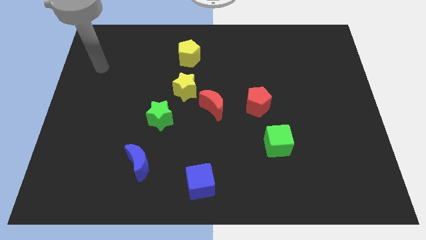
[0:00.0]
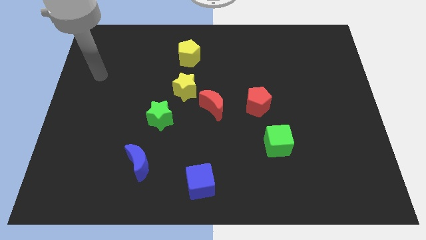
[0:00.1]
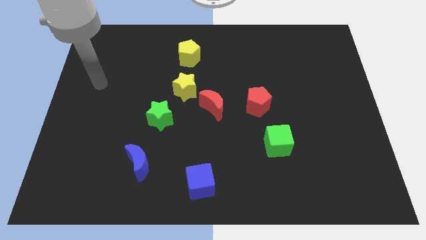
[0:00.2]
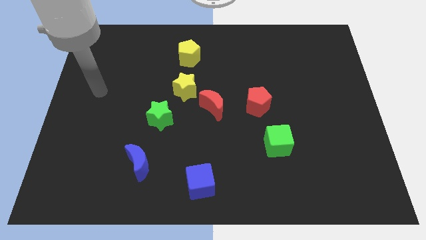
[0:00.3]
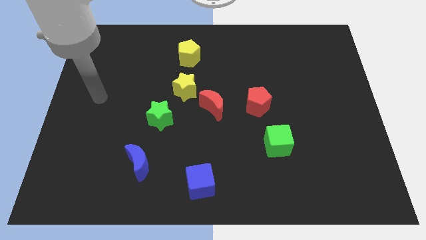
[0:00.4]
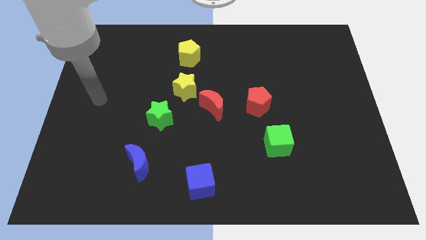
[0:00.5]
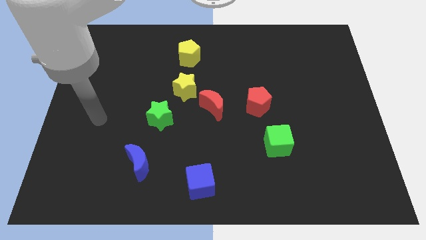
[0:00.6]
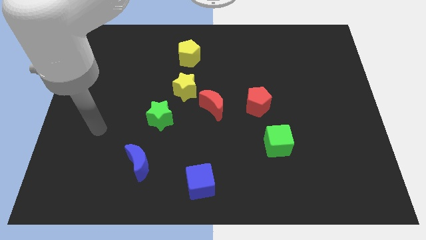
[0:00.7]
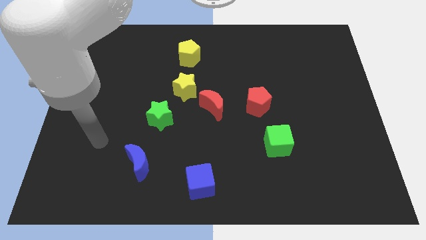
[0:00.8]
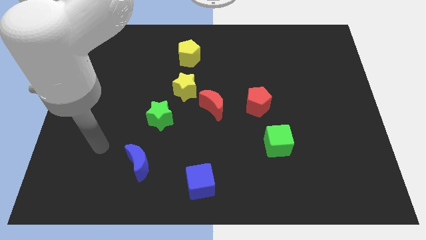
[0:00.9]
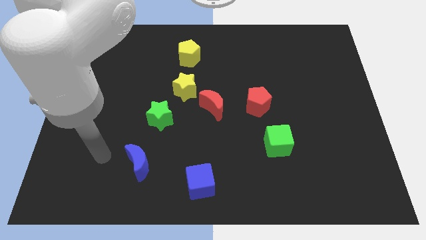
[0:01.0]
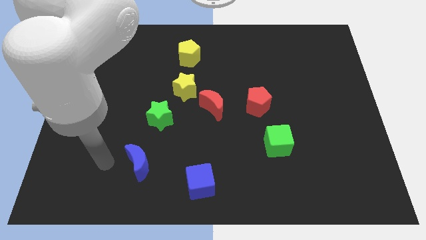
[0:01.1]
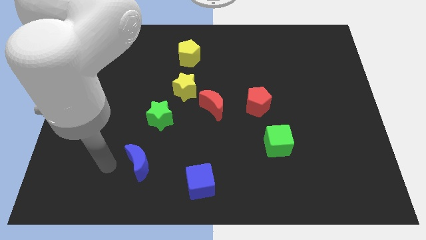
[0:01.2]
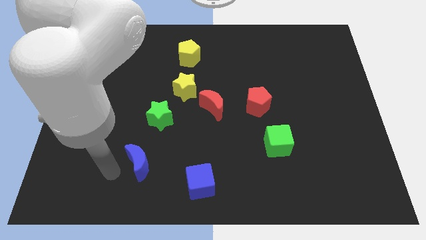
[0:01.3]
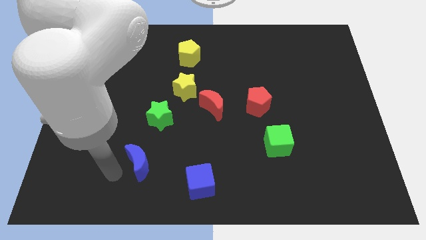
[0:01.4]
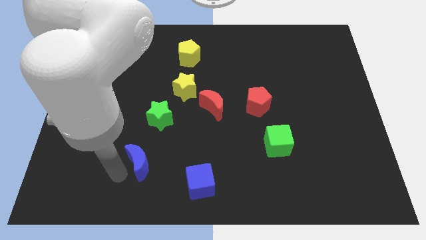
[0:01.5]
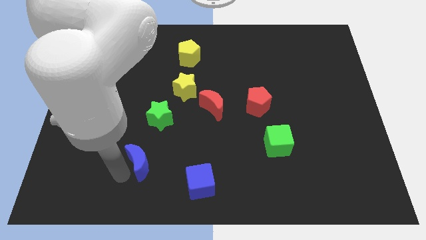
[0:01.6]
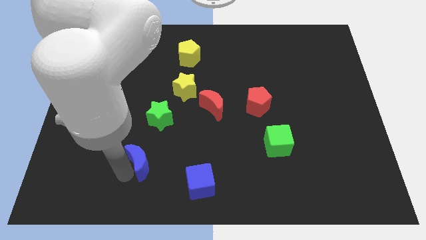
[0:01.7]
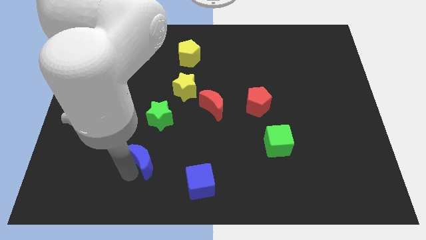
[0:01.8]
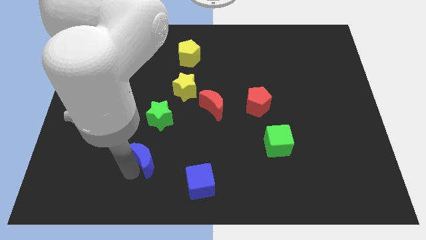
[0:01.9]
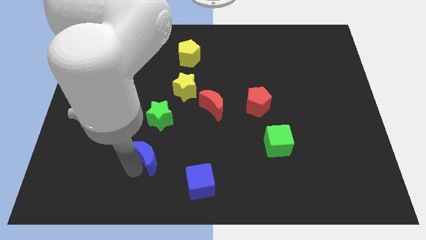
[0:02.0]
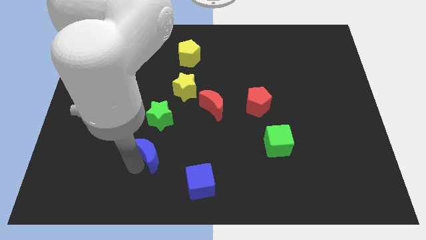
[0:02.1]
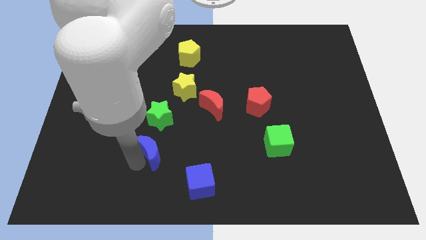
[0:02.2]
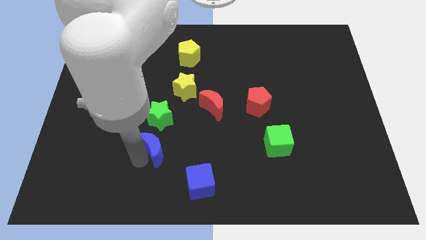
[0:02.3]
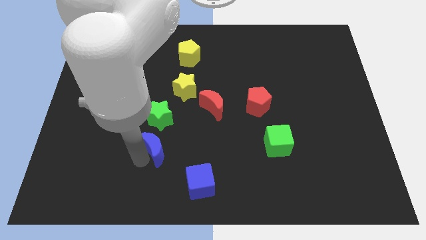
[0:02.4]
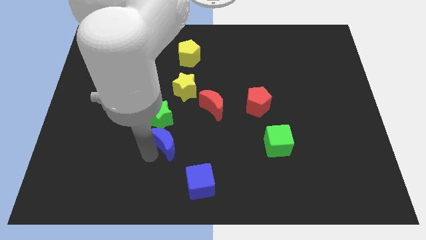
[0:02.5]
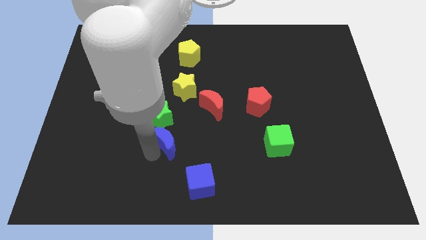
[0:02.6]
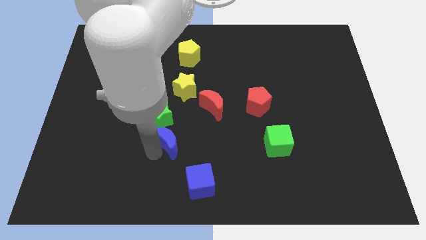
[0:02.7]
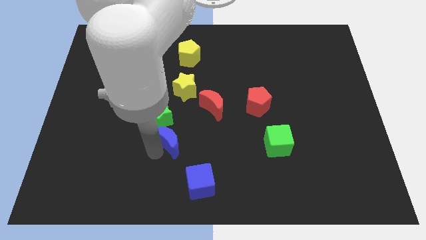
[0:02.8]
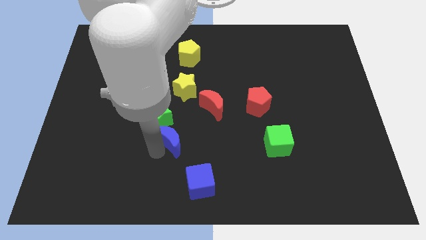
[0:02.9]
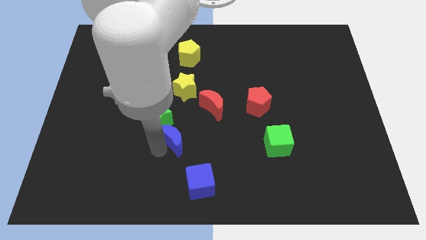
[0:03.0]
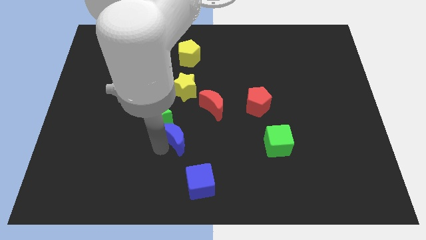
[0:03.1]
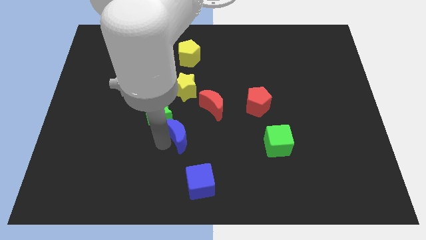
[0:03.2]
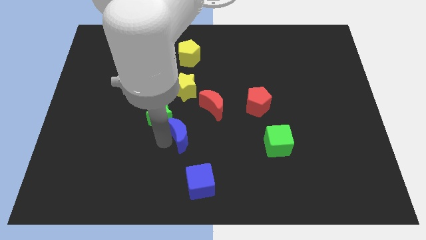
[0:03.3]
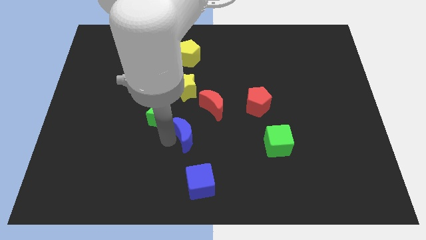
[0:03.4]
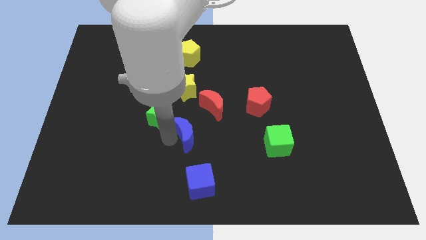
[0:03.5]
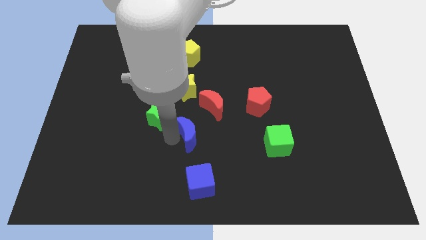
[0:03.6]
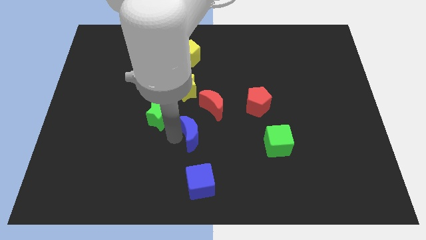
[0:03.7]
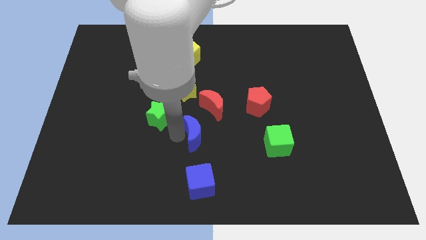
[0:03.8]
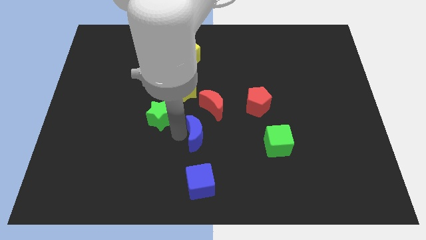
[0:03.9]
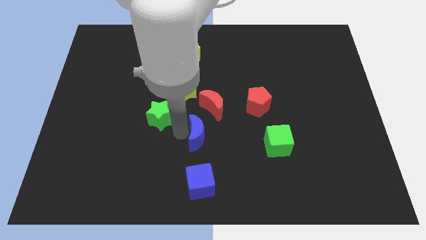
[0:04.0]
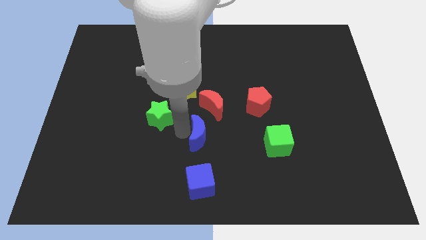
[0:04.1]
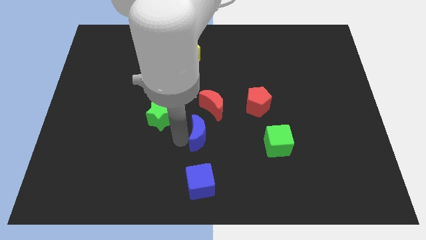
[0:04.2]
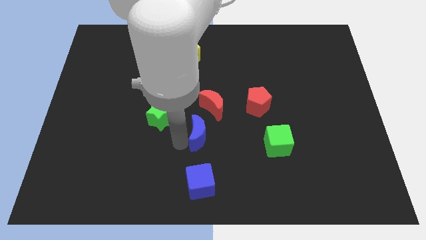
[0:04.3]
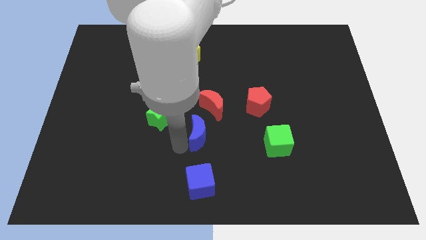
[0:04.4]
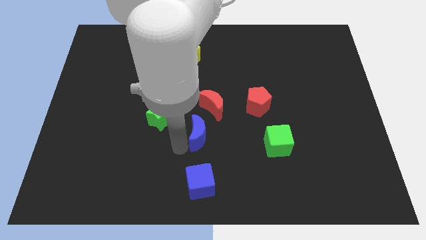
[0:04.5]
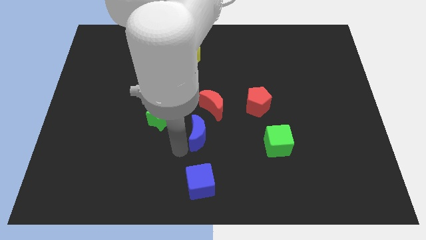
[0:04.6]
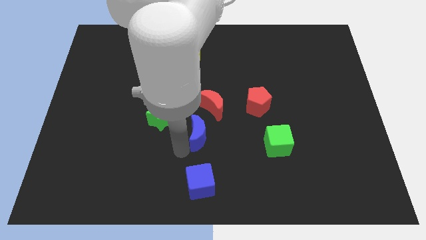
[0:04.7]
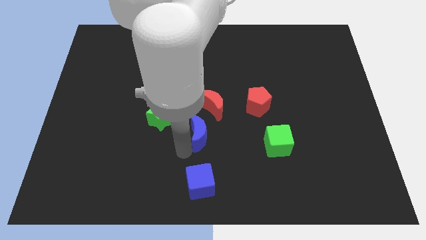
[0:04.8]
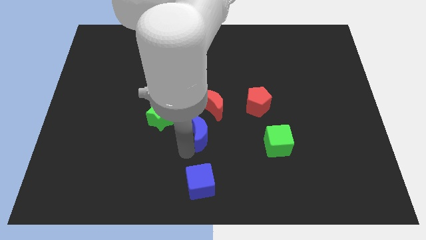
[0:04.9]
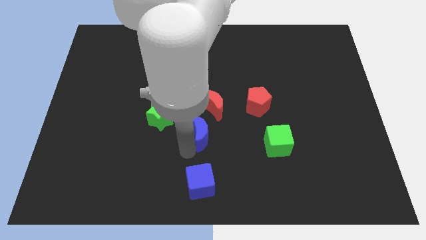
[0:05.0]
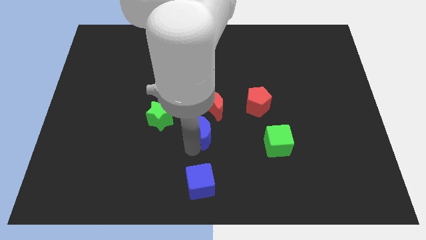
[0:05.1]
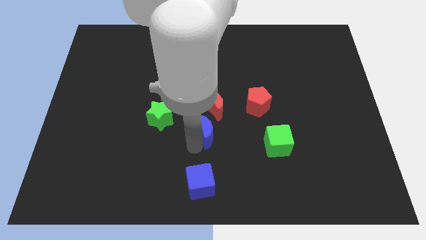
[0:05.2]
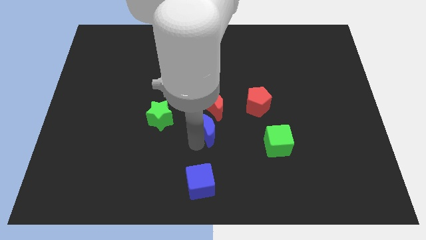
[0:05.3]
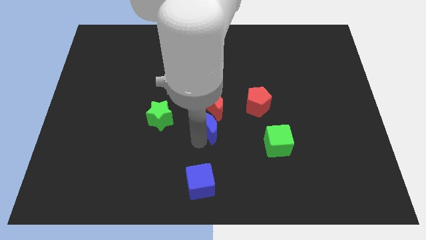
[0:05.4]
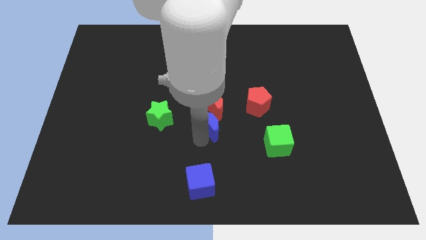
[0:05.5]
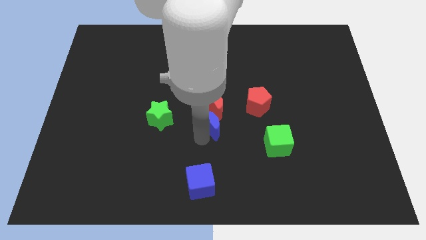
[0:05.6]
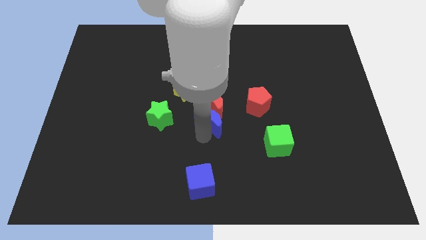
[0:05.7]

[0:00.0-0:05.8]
slide the blue moon to the red moon

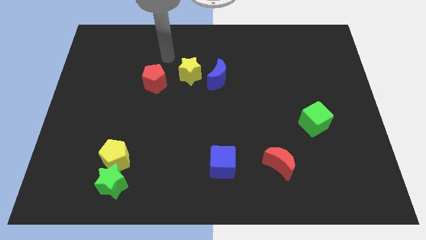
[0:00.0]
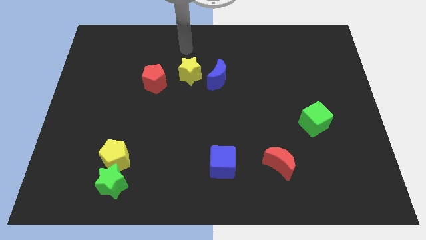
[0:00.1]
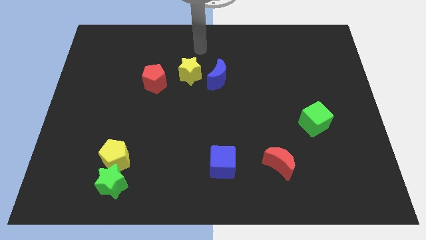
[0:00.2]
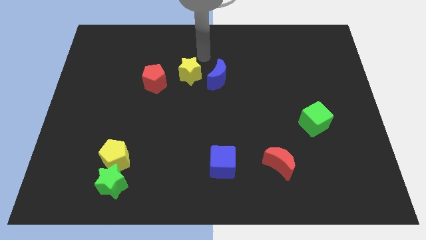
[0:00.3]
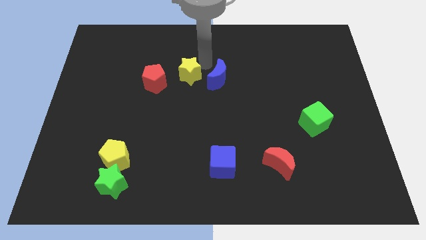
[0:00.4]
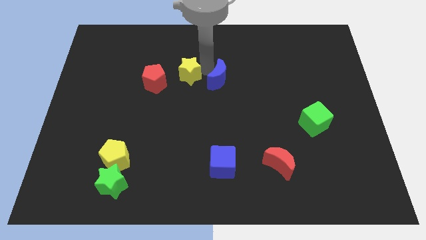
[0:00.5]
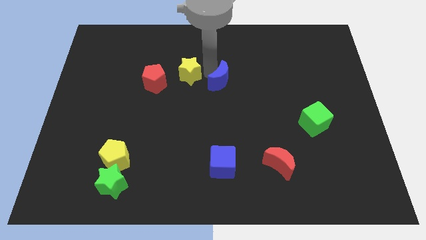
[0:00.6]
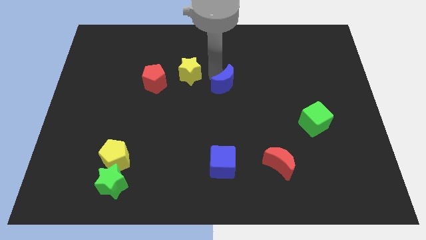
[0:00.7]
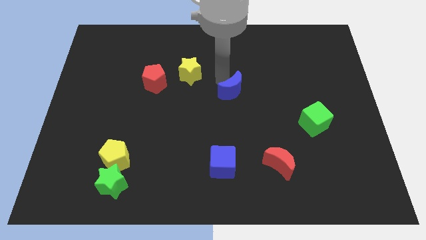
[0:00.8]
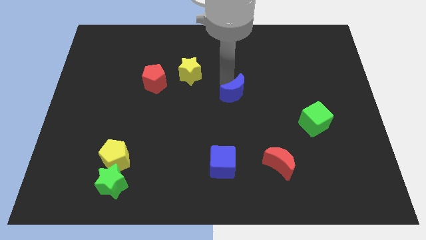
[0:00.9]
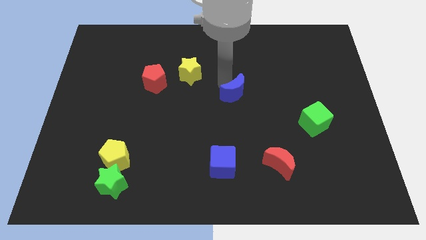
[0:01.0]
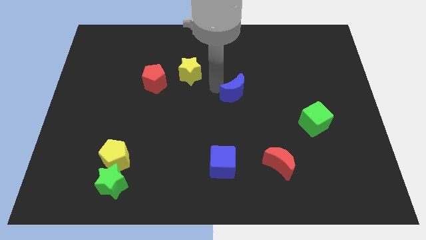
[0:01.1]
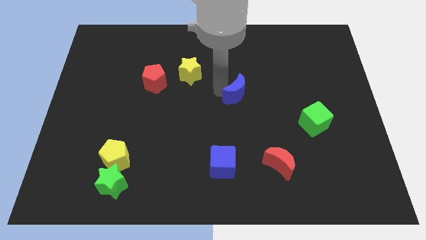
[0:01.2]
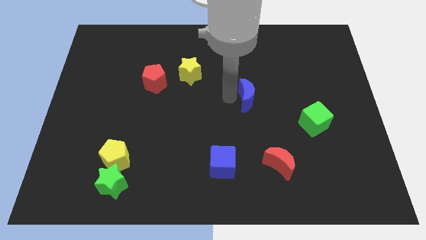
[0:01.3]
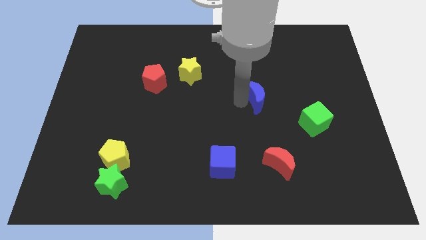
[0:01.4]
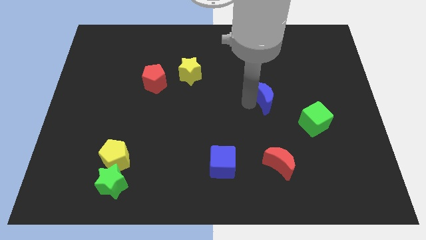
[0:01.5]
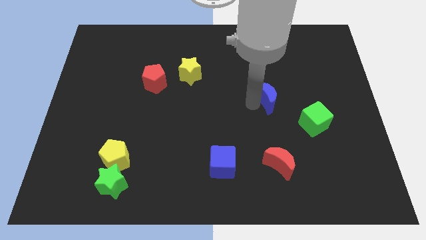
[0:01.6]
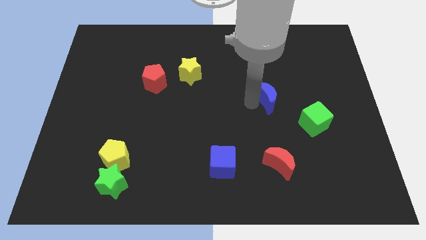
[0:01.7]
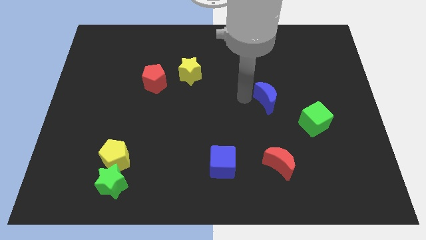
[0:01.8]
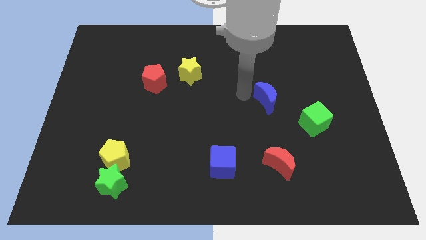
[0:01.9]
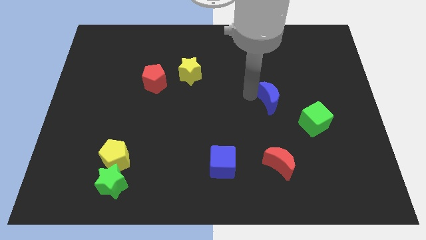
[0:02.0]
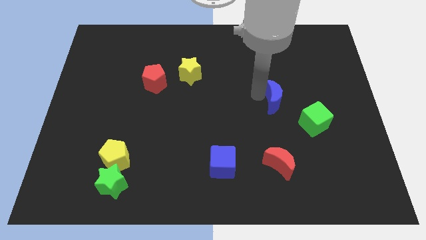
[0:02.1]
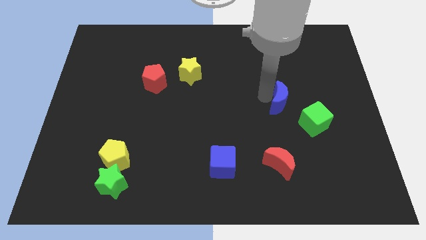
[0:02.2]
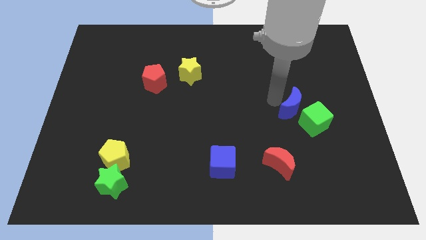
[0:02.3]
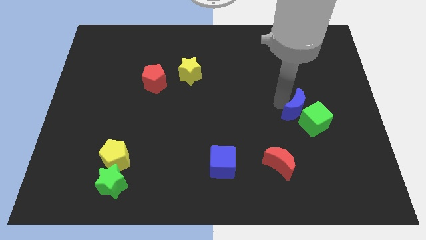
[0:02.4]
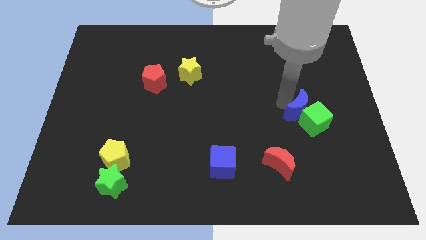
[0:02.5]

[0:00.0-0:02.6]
put the blue moon to the green cube

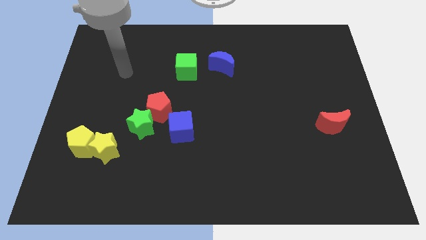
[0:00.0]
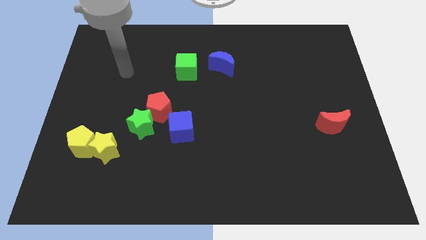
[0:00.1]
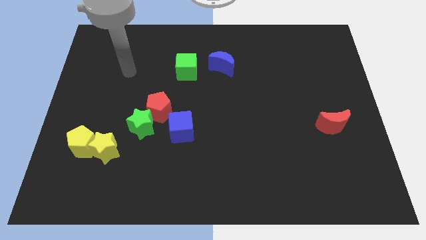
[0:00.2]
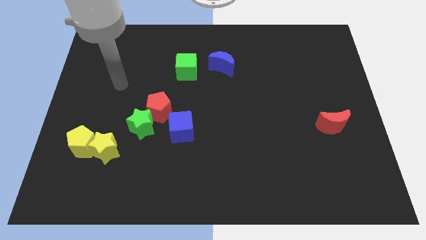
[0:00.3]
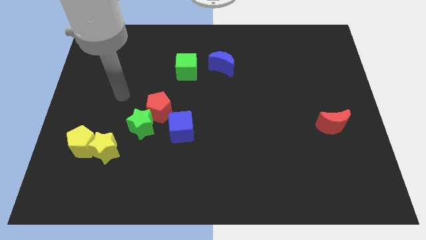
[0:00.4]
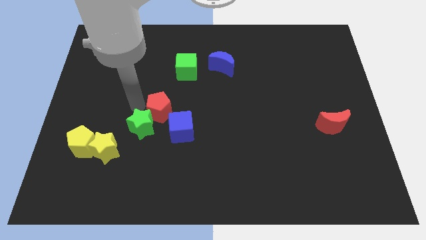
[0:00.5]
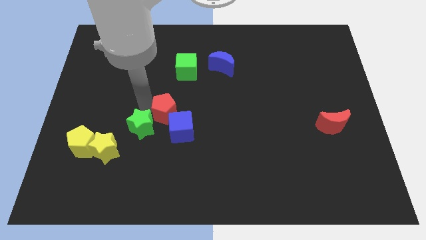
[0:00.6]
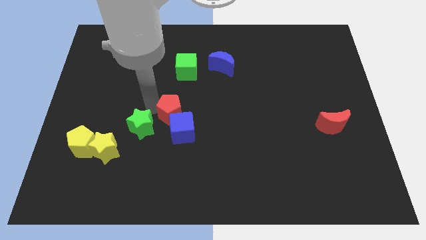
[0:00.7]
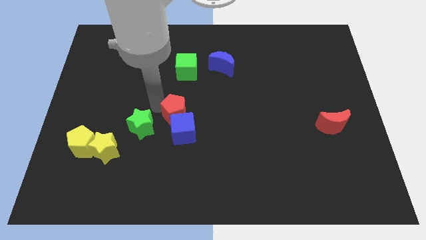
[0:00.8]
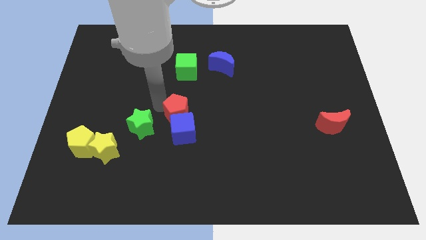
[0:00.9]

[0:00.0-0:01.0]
move the red pentagon next to the blue cube
